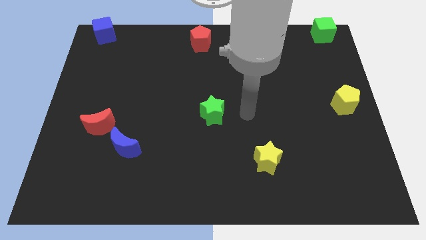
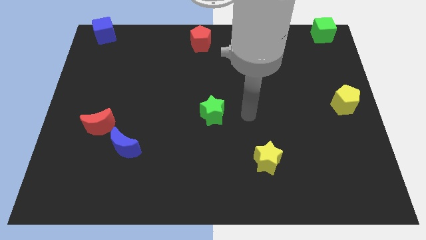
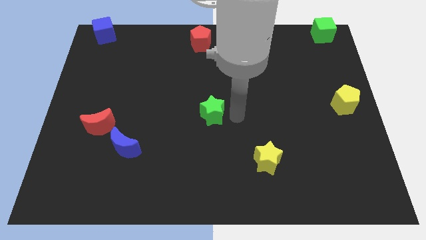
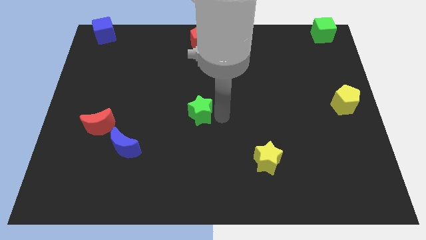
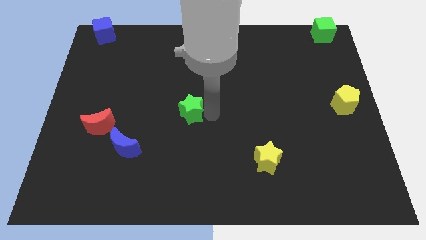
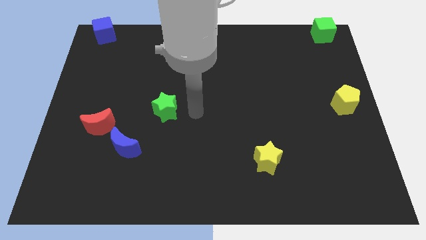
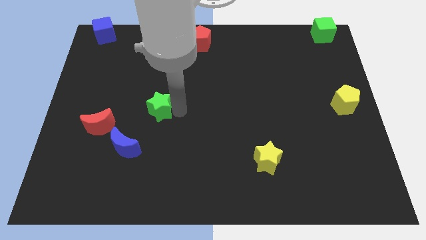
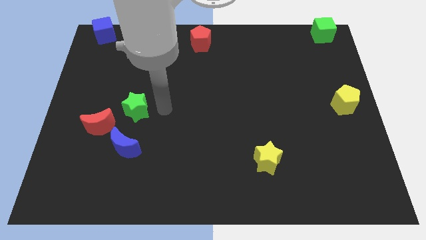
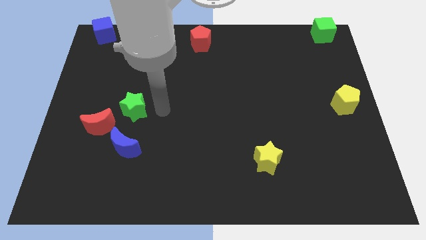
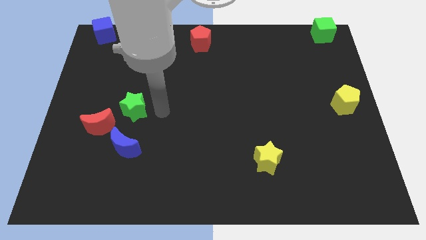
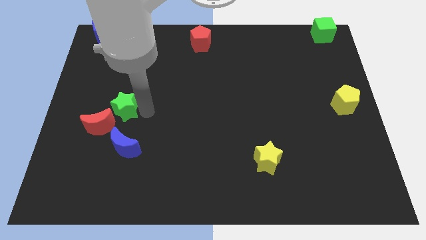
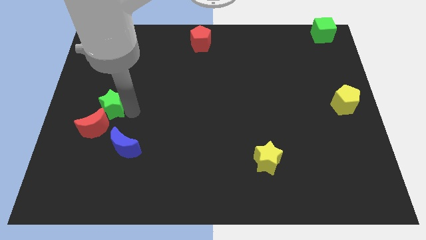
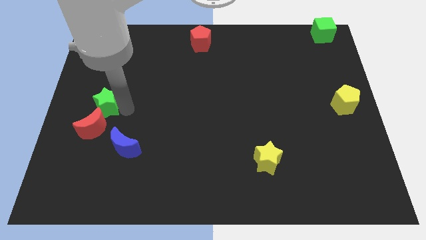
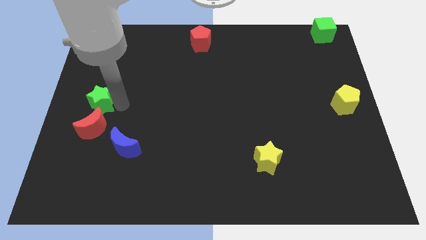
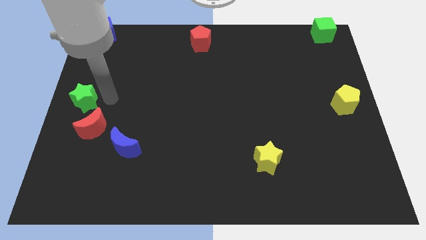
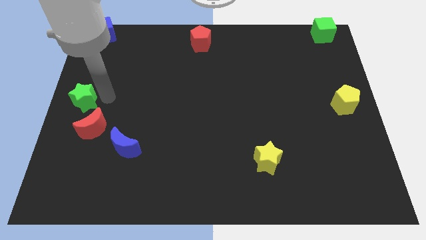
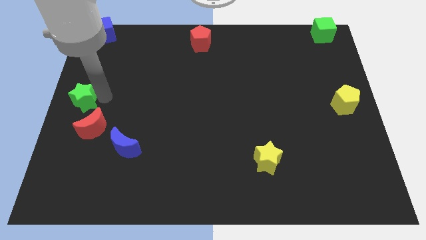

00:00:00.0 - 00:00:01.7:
move the green star above the red crescent

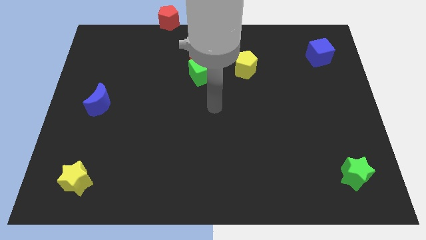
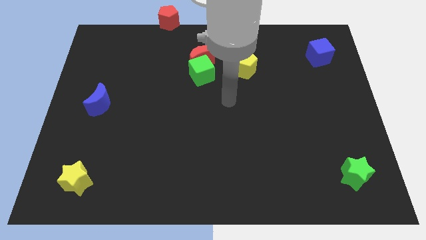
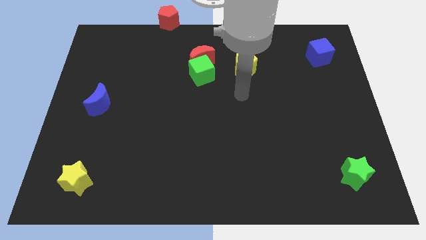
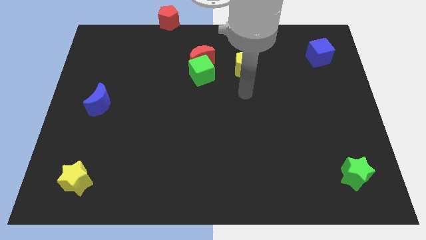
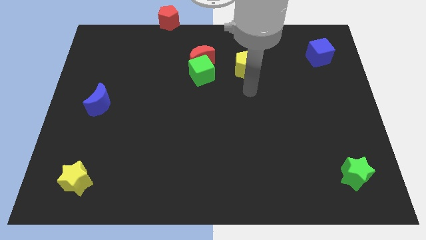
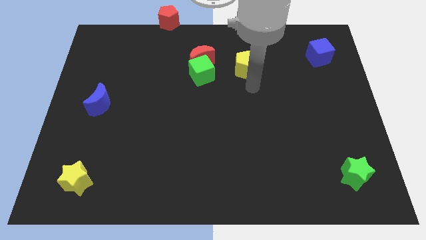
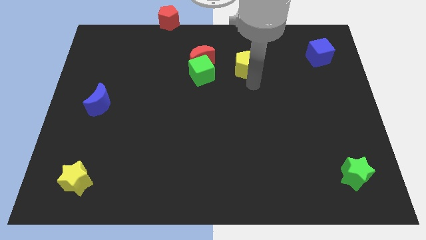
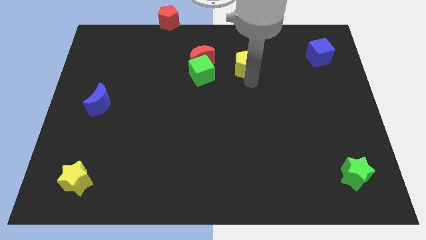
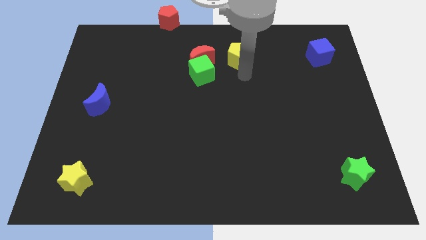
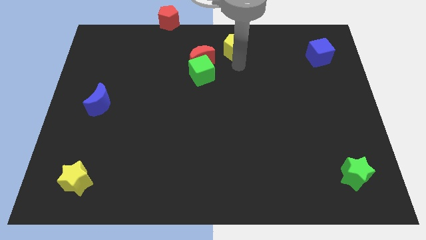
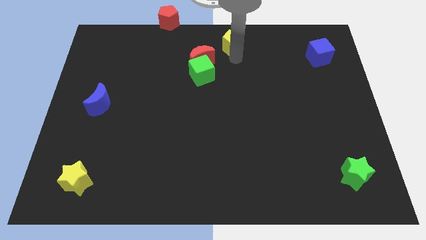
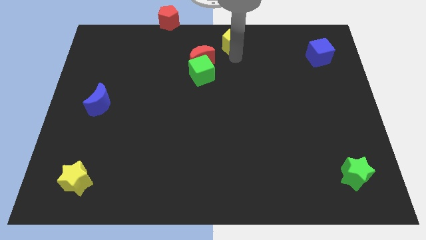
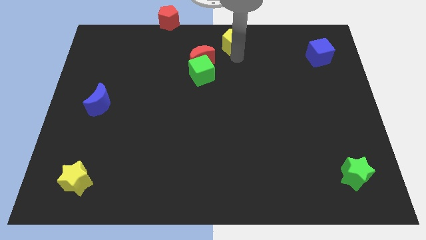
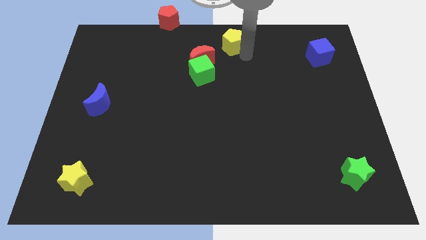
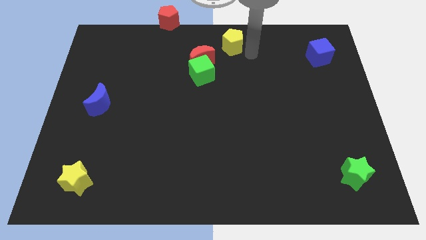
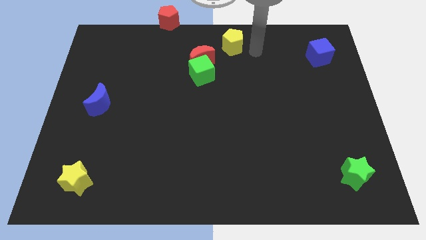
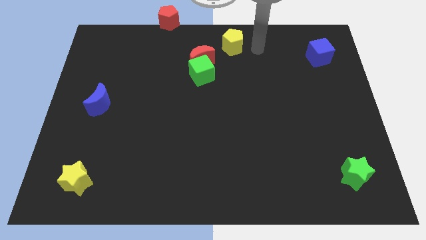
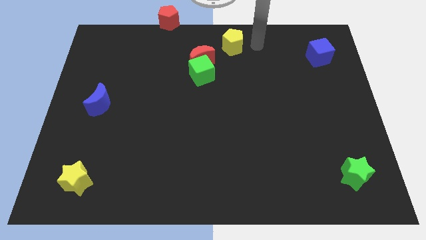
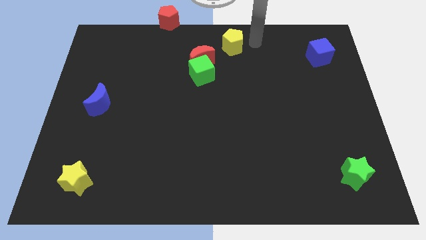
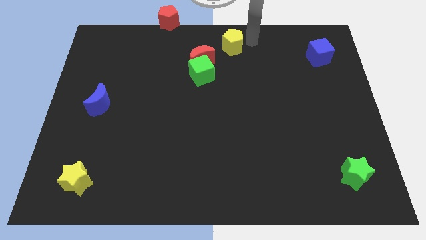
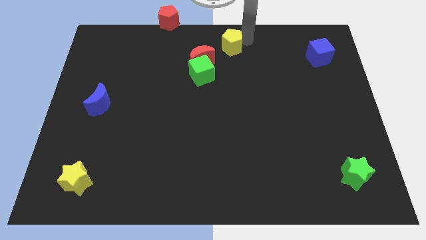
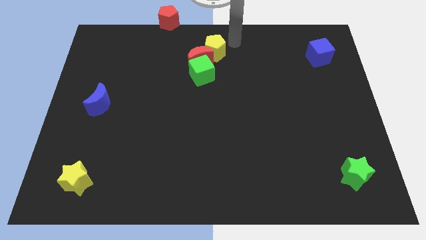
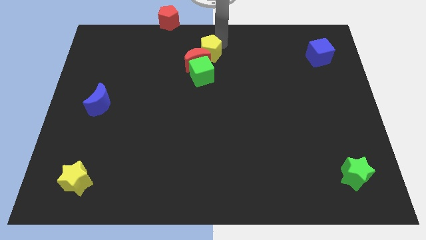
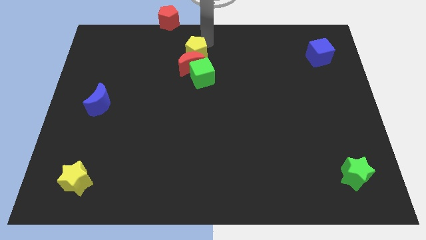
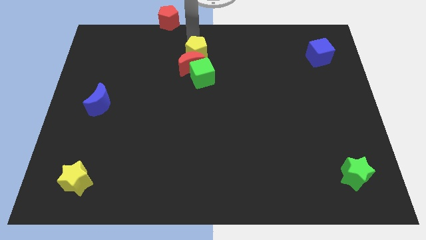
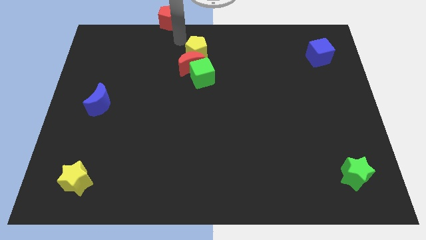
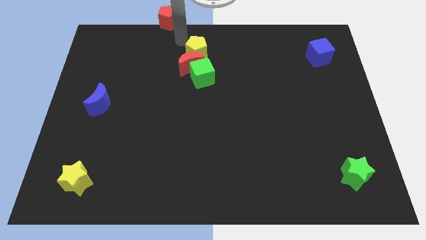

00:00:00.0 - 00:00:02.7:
move yellow pentagon on top of the red crescent

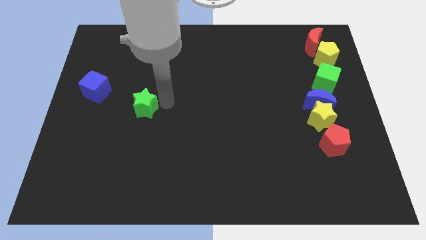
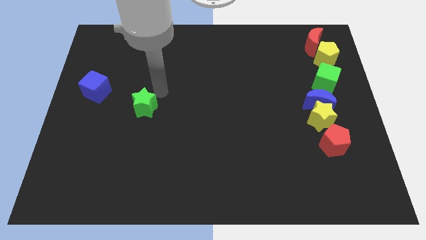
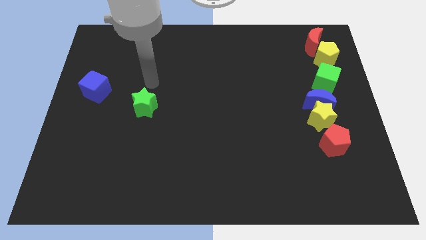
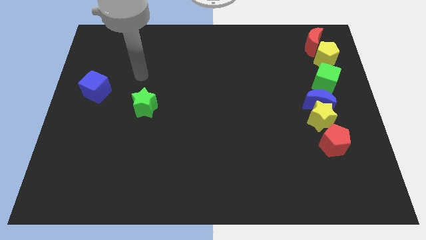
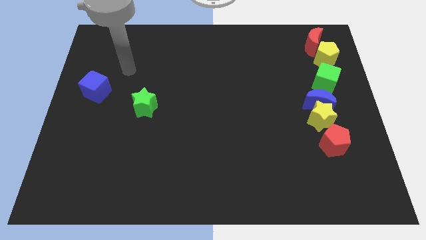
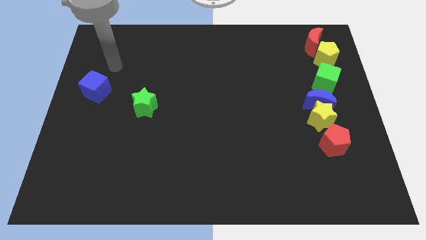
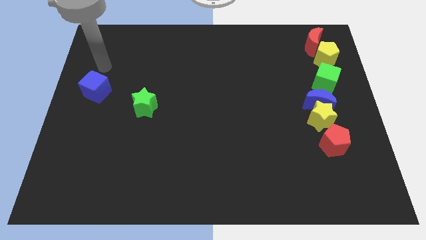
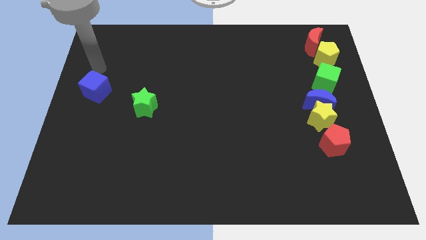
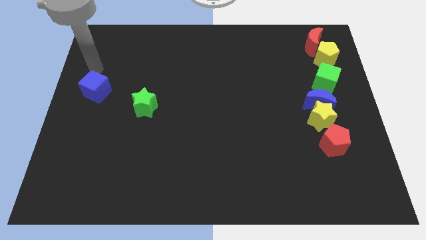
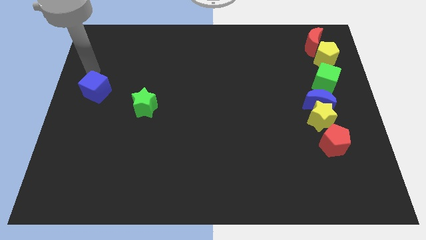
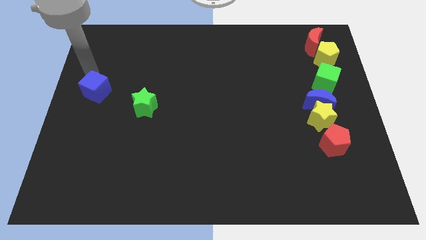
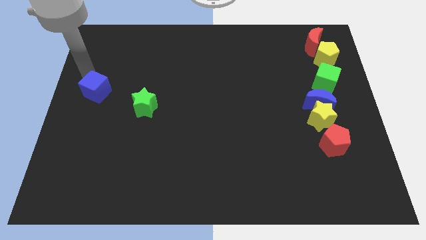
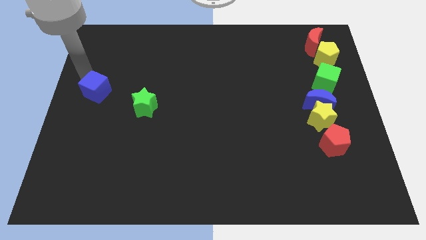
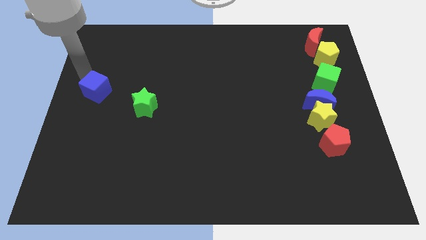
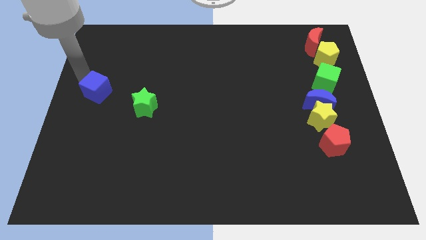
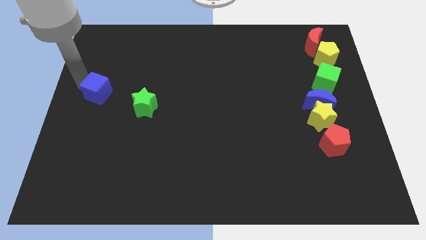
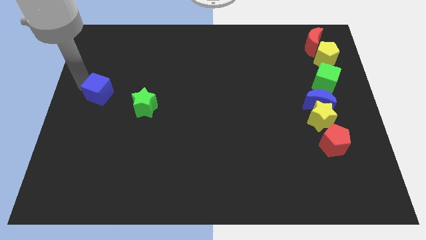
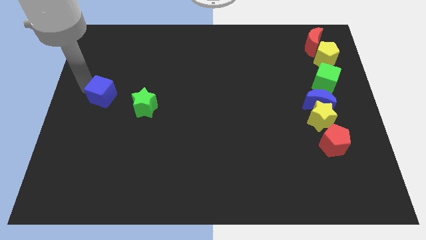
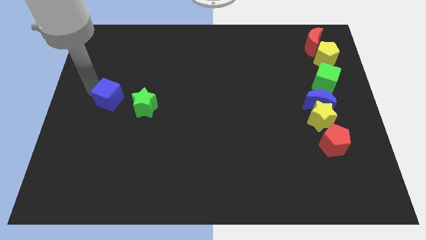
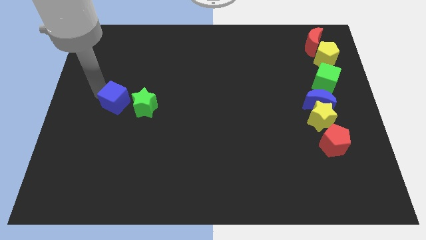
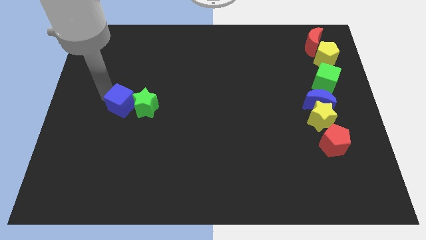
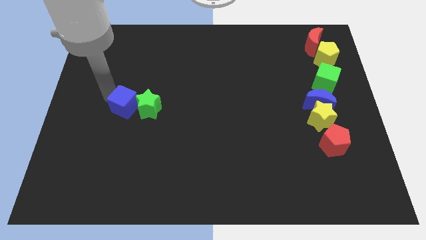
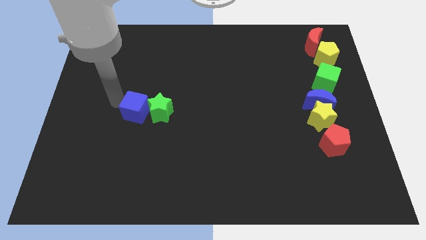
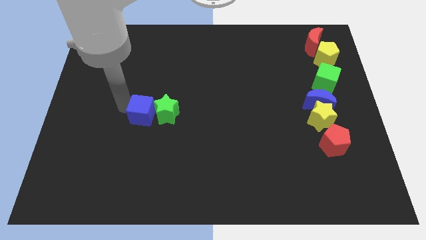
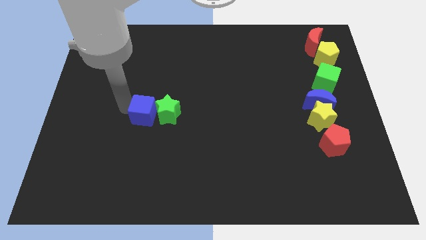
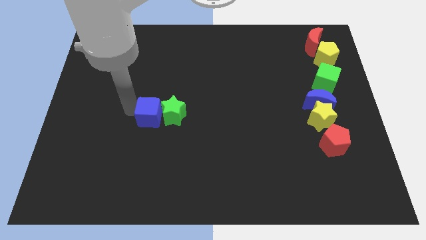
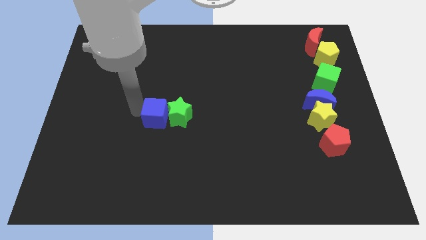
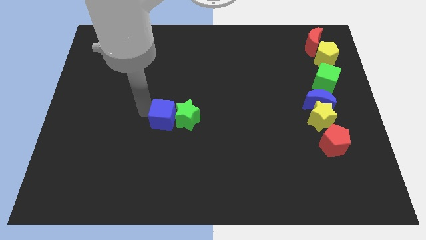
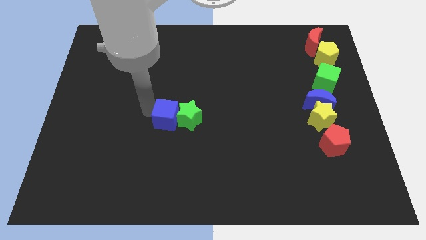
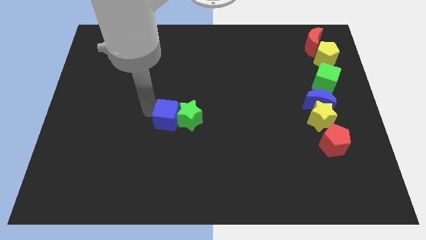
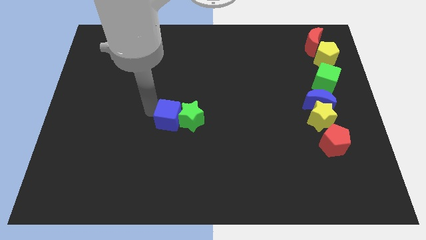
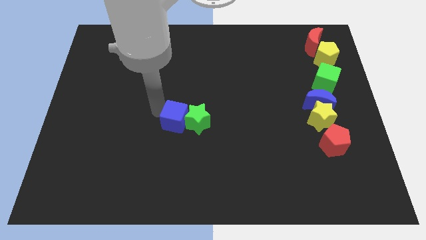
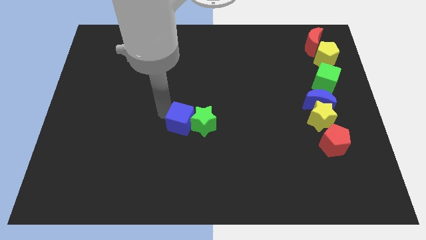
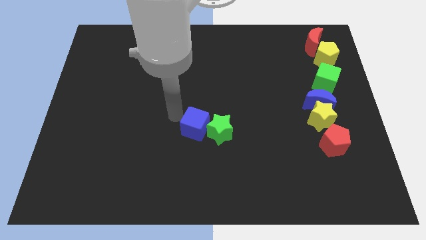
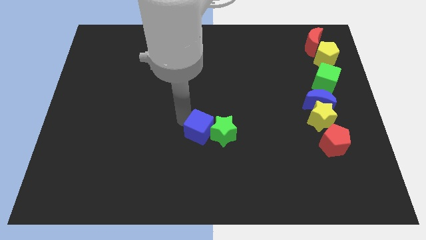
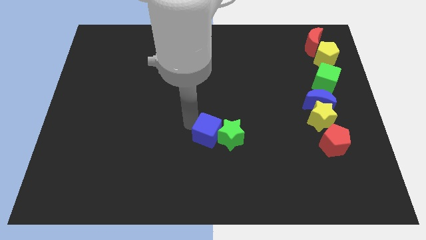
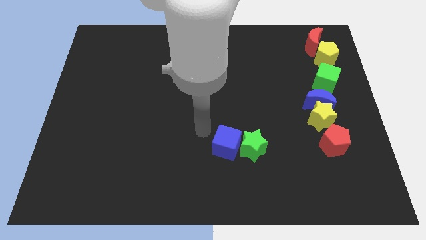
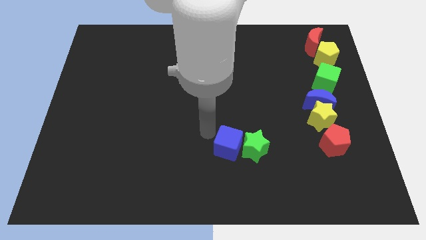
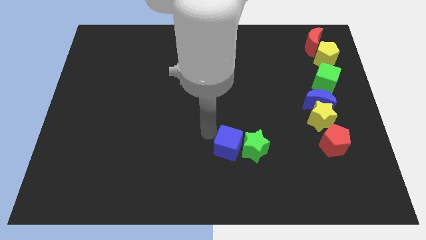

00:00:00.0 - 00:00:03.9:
move the blue cube along with green star towards the bottom right corner

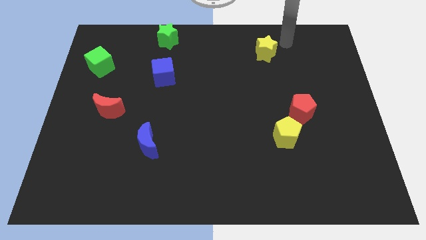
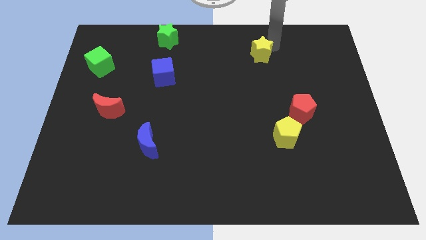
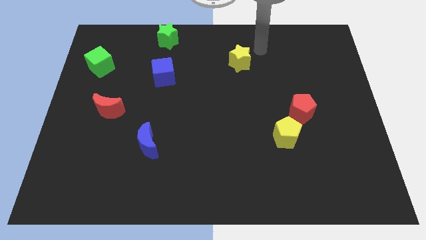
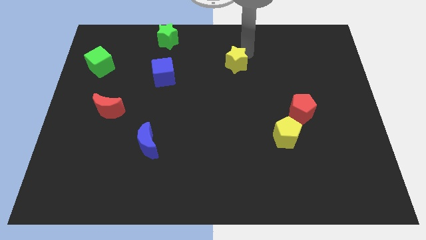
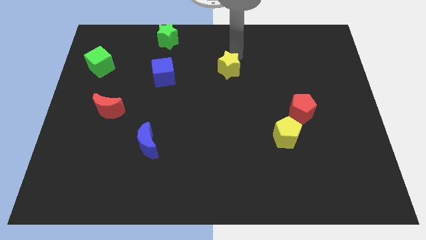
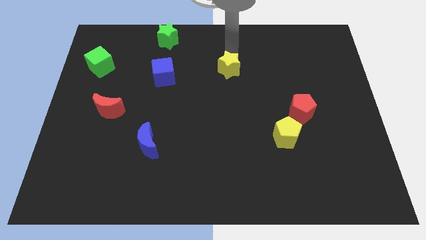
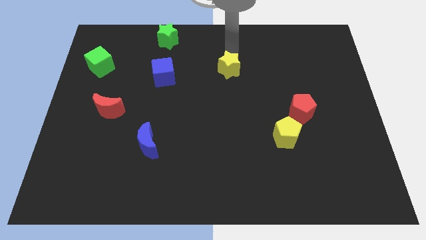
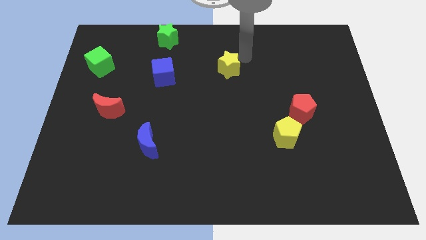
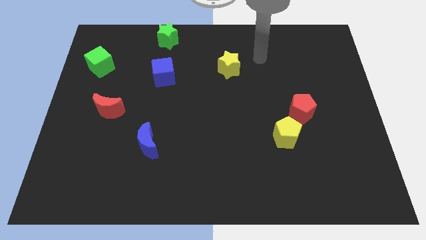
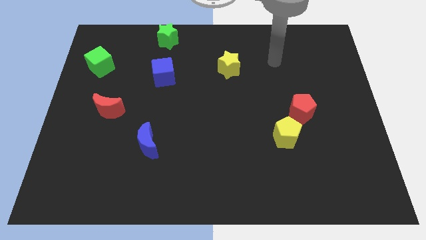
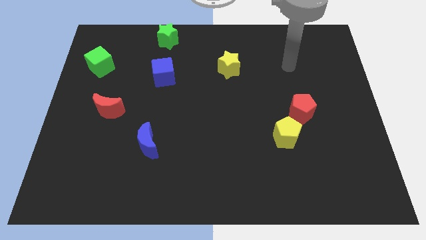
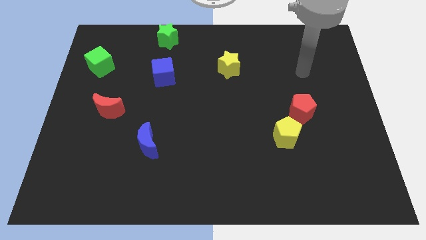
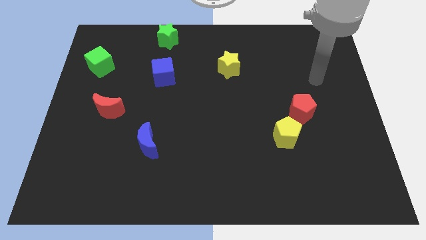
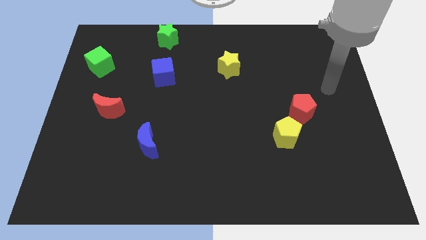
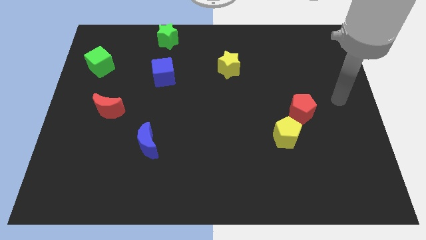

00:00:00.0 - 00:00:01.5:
slide the yellow star diagonally on the bottom right side of the green star
